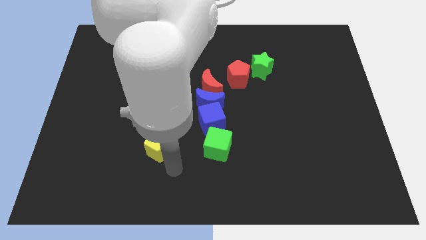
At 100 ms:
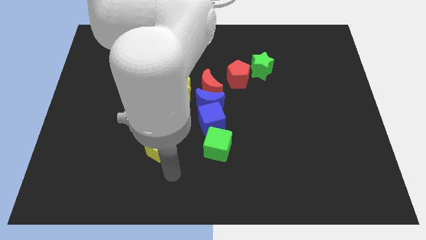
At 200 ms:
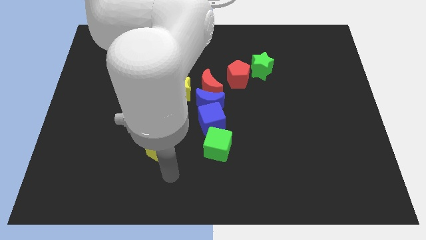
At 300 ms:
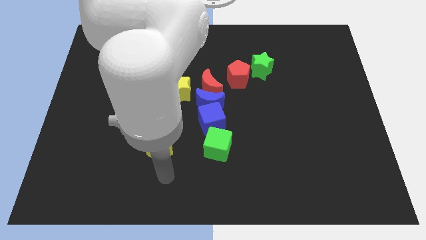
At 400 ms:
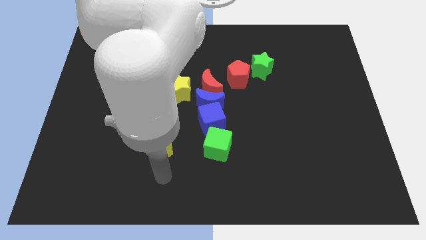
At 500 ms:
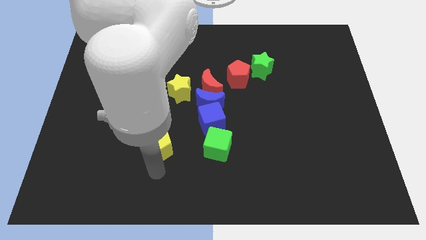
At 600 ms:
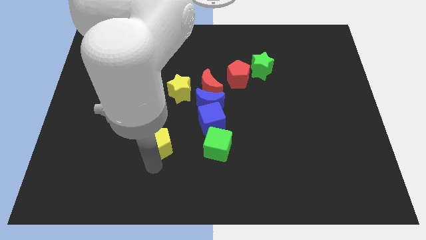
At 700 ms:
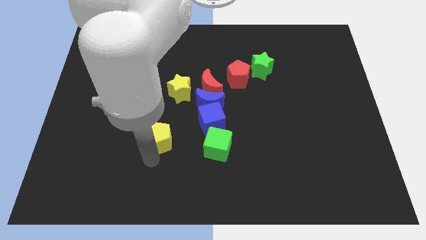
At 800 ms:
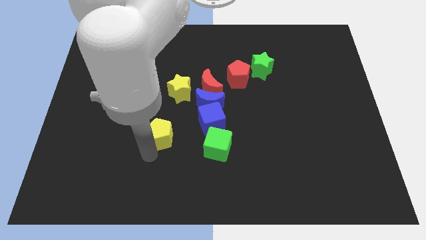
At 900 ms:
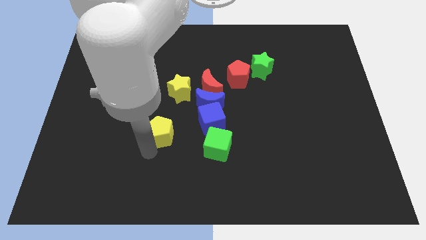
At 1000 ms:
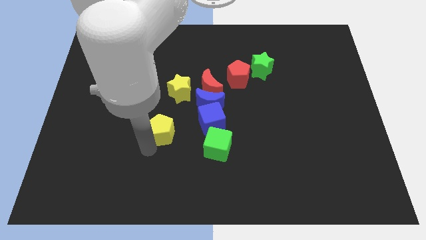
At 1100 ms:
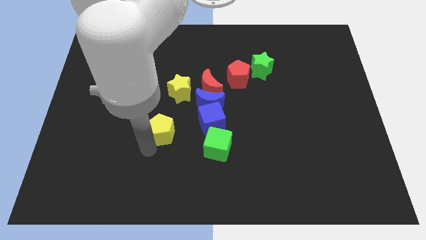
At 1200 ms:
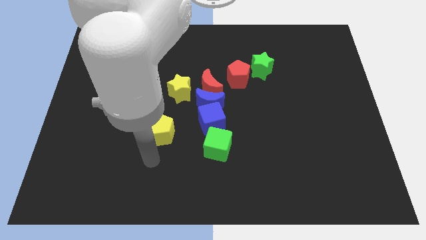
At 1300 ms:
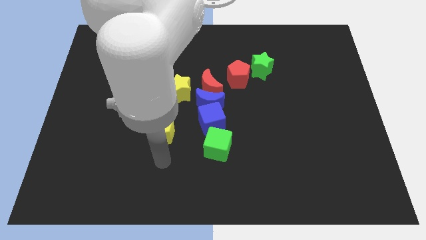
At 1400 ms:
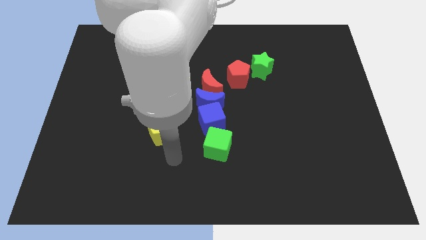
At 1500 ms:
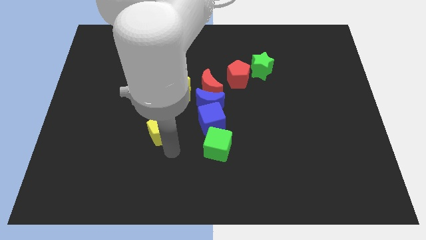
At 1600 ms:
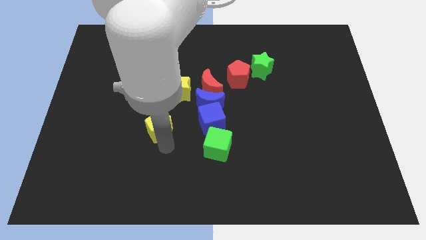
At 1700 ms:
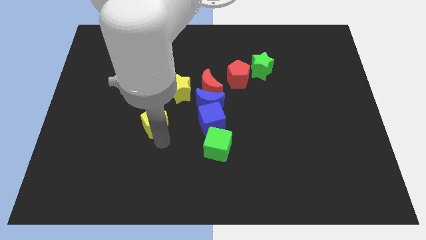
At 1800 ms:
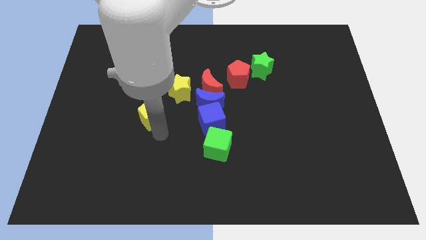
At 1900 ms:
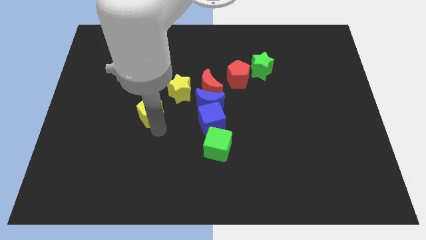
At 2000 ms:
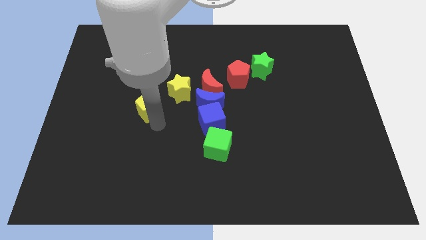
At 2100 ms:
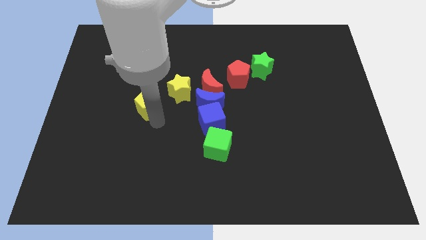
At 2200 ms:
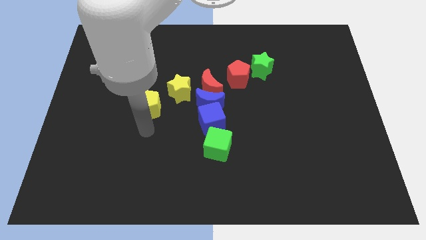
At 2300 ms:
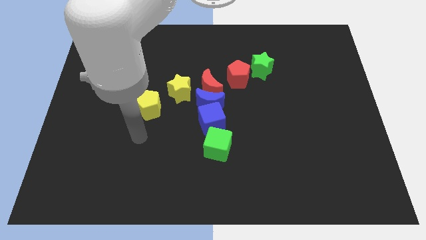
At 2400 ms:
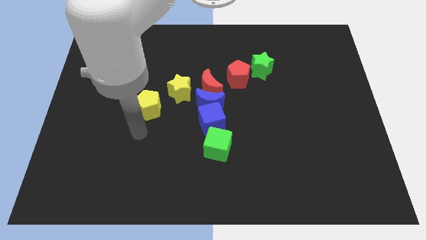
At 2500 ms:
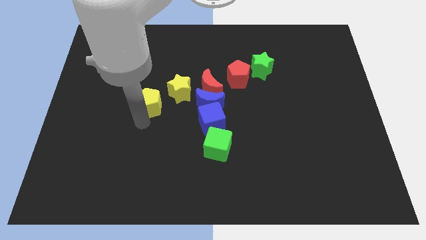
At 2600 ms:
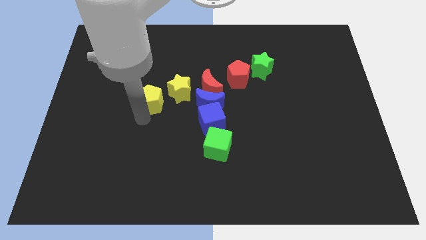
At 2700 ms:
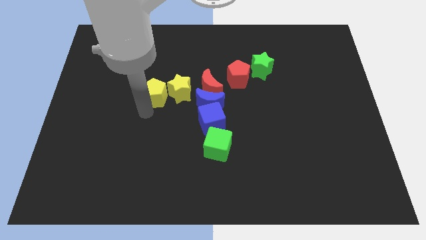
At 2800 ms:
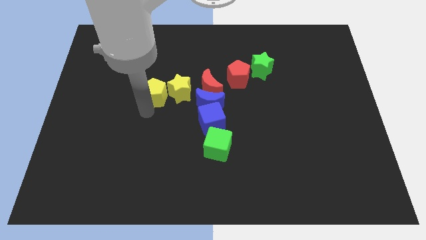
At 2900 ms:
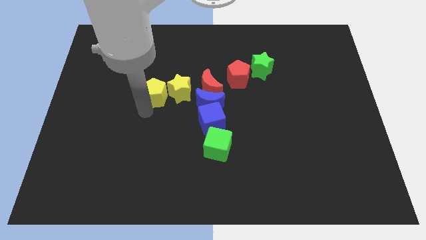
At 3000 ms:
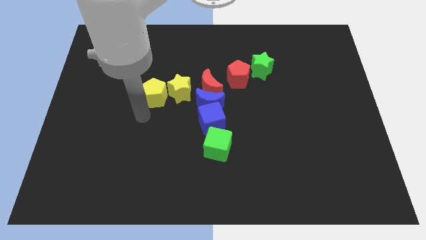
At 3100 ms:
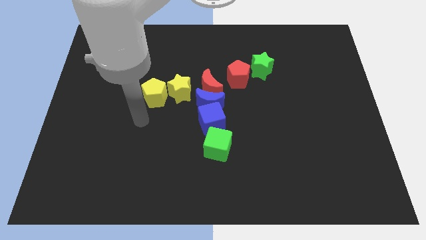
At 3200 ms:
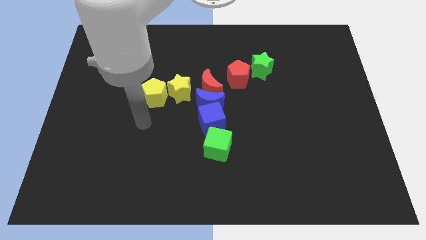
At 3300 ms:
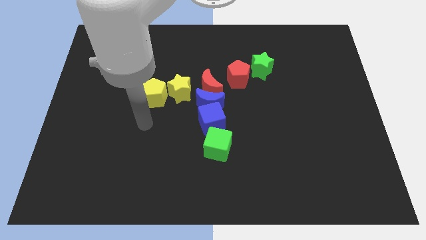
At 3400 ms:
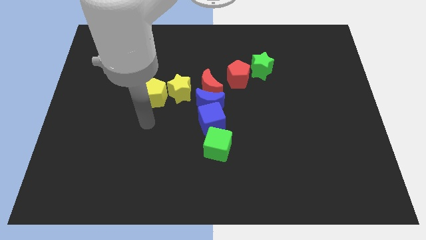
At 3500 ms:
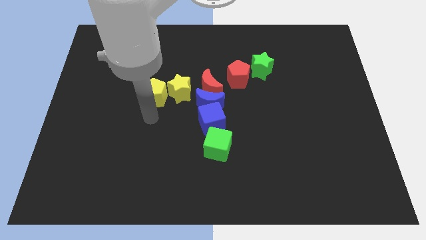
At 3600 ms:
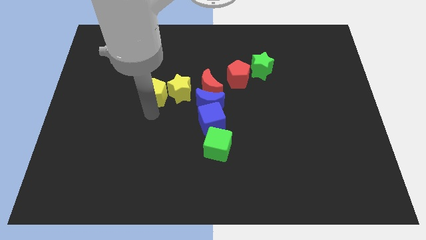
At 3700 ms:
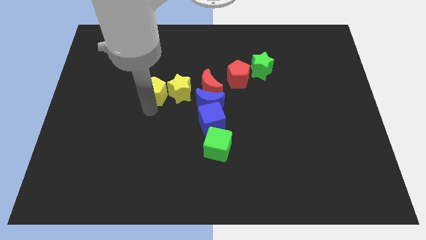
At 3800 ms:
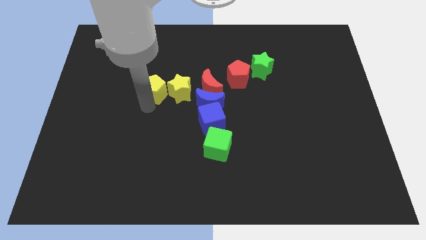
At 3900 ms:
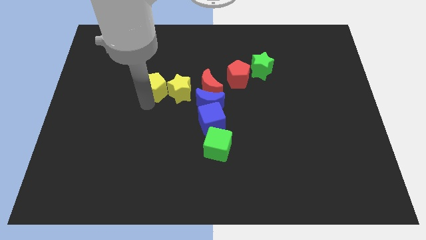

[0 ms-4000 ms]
place the yellow pentagon left to the yellow star

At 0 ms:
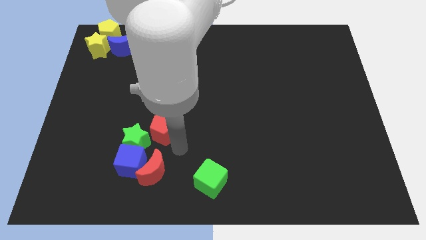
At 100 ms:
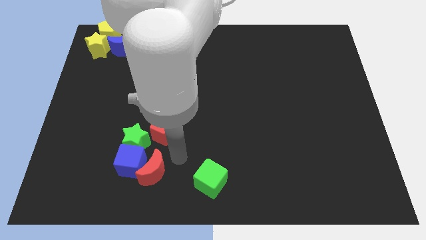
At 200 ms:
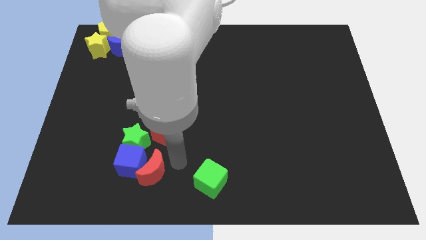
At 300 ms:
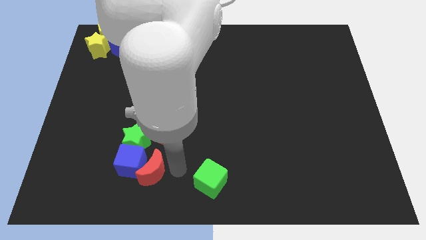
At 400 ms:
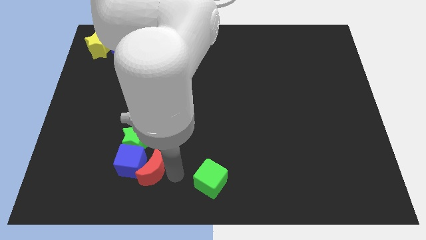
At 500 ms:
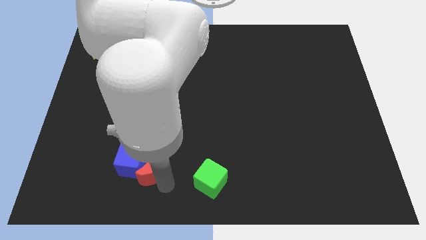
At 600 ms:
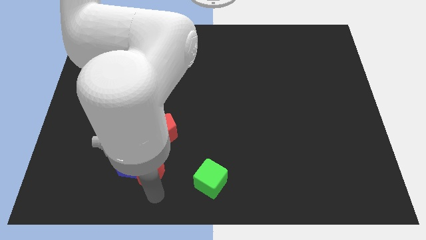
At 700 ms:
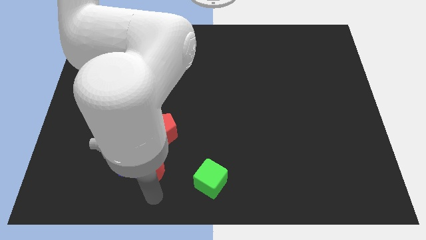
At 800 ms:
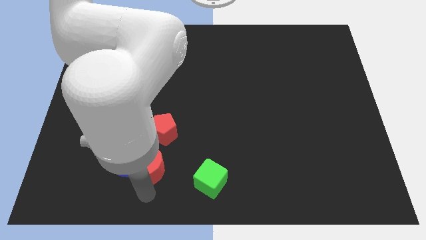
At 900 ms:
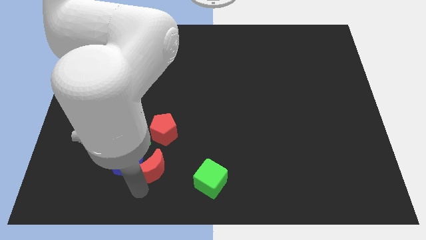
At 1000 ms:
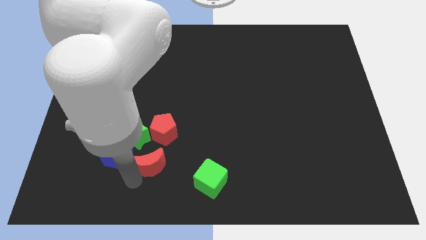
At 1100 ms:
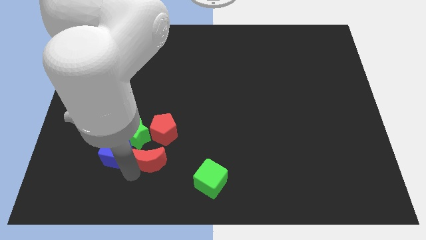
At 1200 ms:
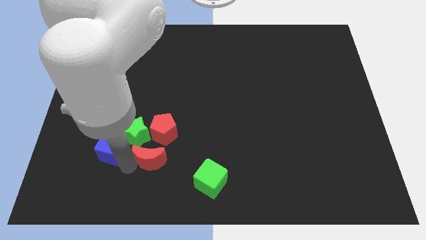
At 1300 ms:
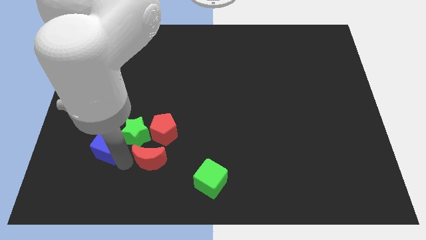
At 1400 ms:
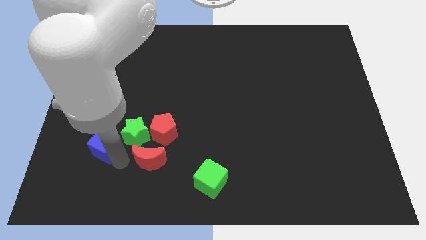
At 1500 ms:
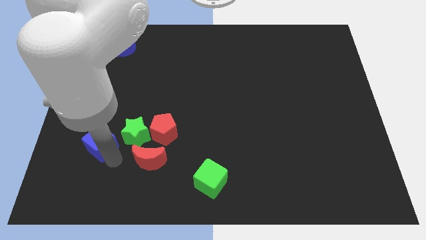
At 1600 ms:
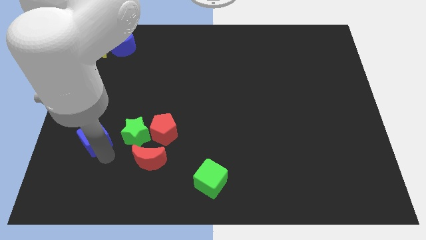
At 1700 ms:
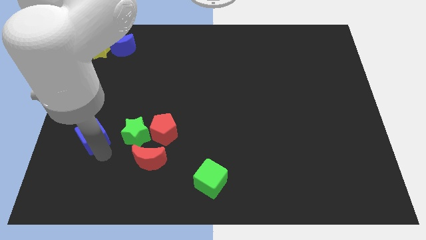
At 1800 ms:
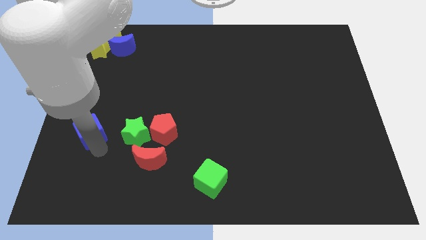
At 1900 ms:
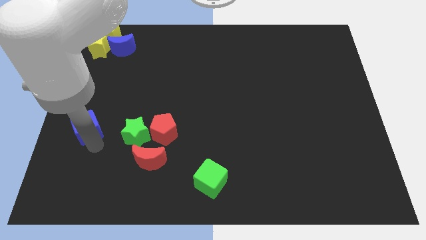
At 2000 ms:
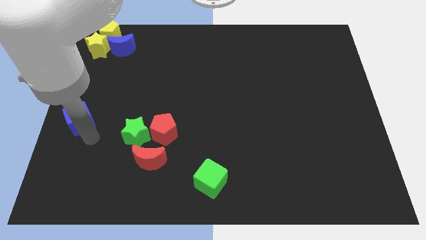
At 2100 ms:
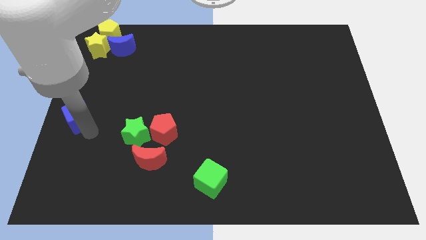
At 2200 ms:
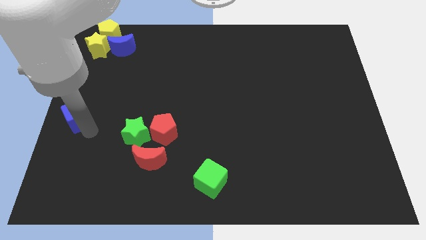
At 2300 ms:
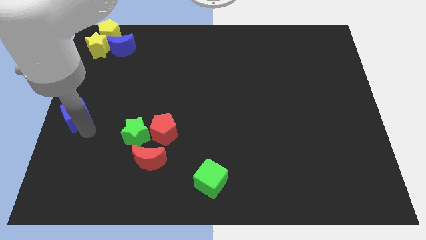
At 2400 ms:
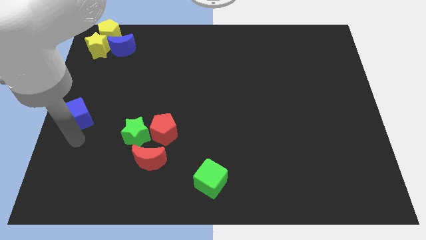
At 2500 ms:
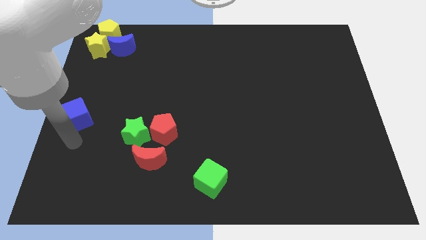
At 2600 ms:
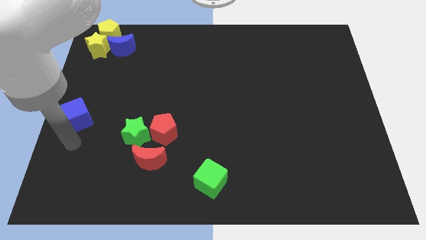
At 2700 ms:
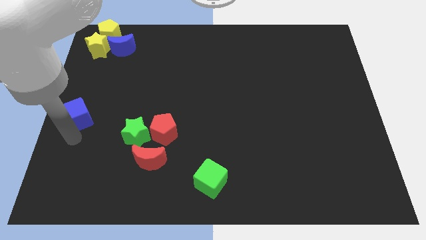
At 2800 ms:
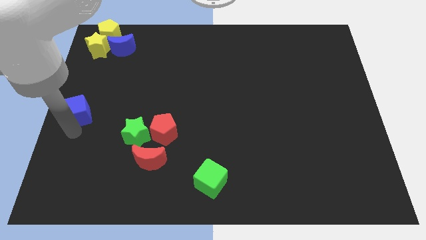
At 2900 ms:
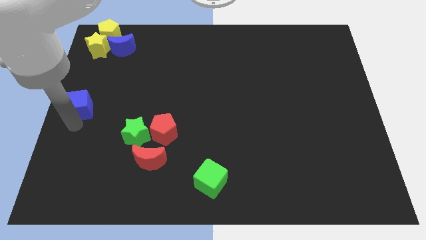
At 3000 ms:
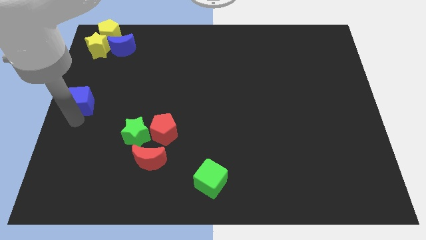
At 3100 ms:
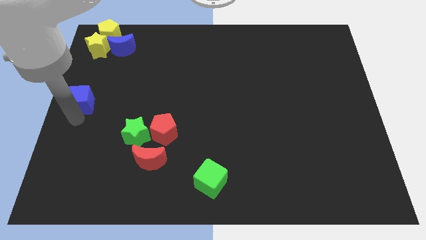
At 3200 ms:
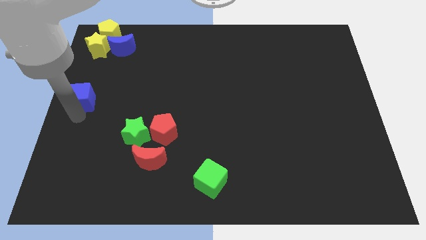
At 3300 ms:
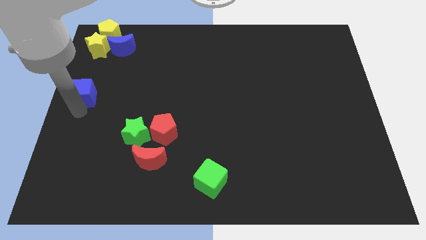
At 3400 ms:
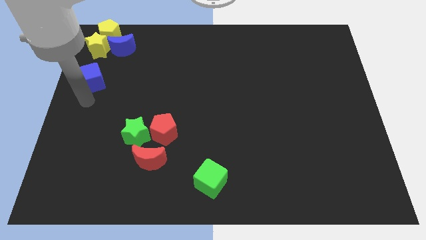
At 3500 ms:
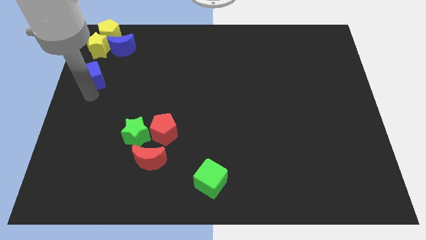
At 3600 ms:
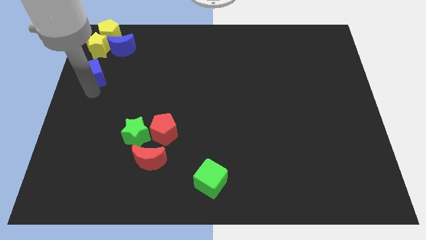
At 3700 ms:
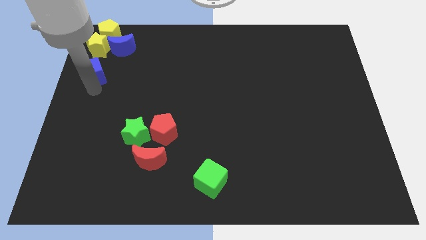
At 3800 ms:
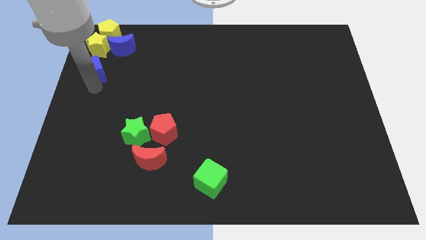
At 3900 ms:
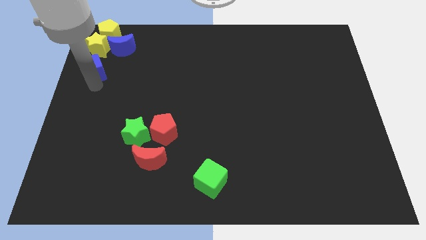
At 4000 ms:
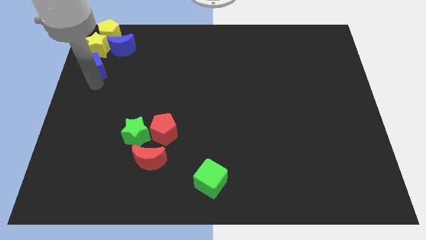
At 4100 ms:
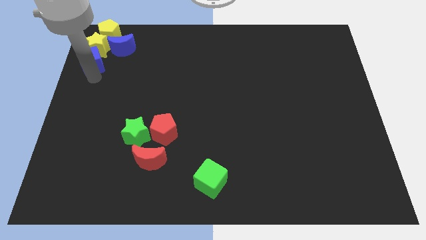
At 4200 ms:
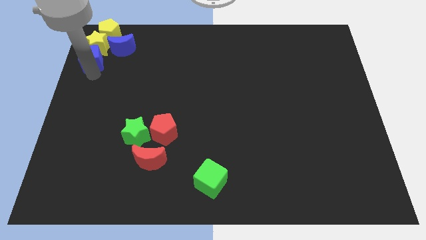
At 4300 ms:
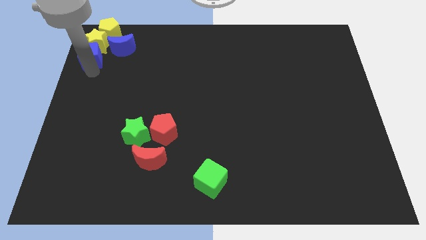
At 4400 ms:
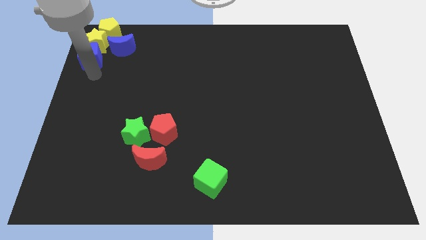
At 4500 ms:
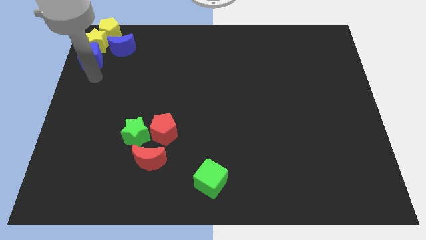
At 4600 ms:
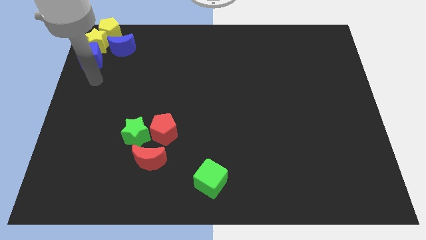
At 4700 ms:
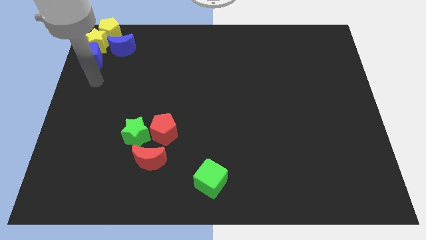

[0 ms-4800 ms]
push the blue cube into the yellow star

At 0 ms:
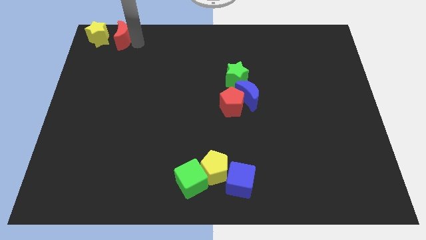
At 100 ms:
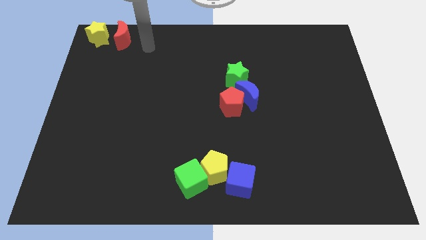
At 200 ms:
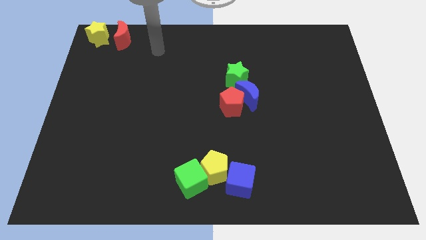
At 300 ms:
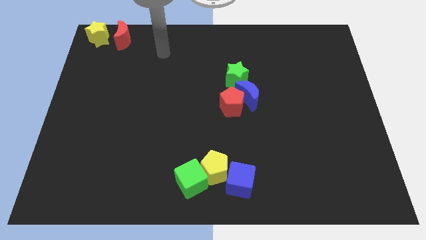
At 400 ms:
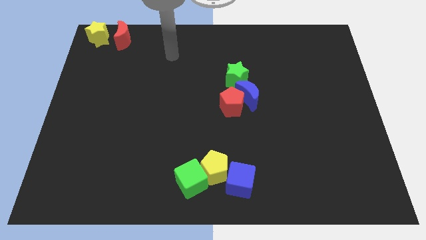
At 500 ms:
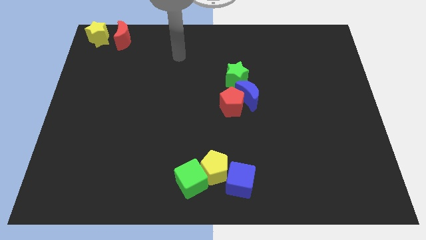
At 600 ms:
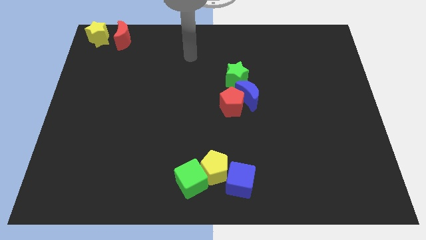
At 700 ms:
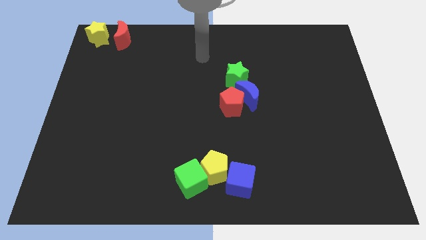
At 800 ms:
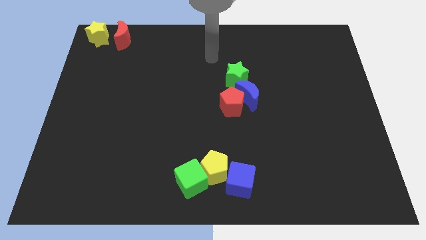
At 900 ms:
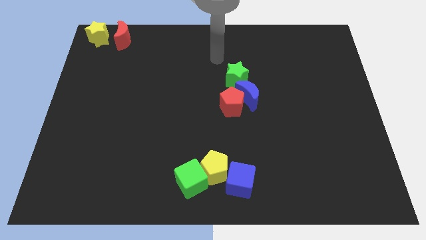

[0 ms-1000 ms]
move your arm away from the red moon
